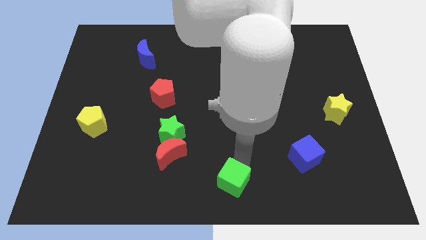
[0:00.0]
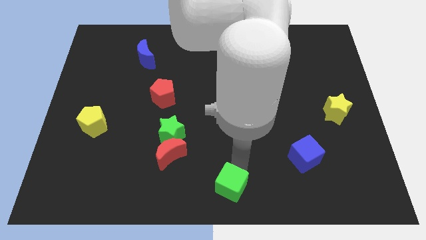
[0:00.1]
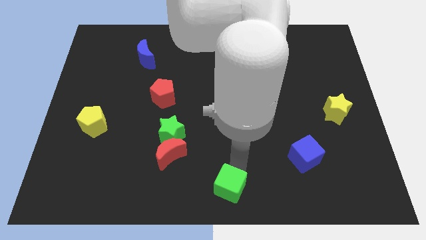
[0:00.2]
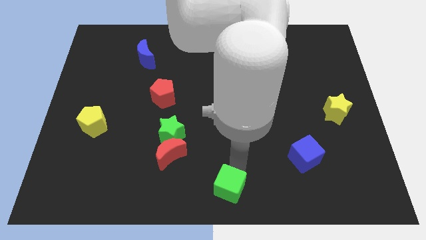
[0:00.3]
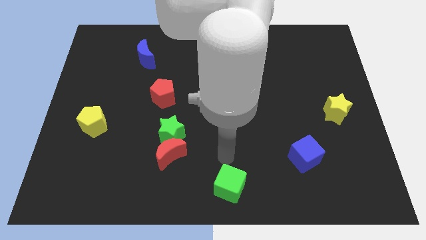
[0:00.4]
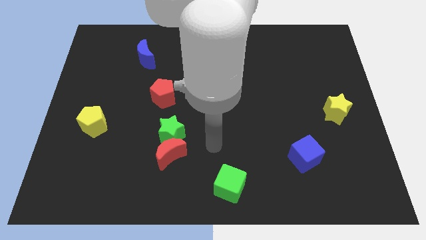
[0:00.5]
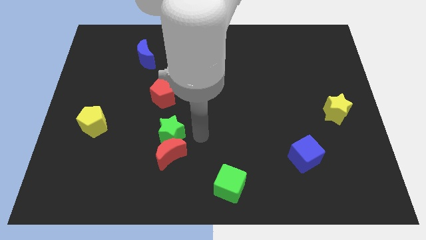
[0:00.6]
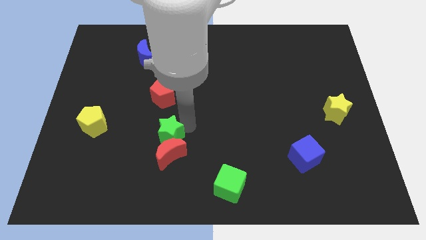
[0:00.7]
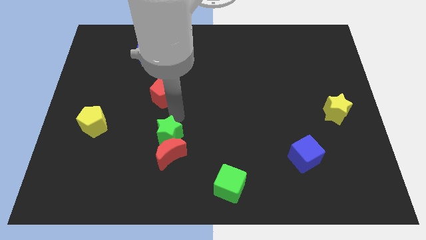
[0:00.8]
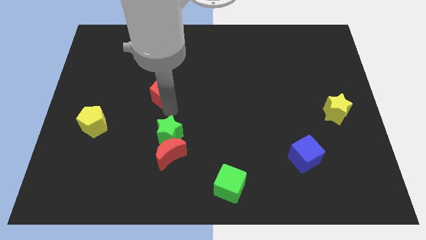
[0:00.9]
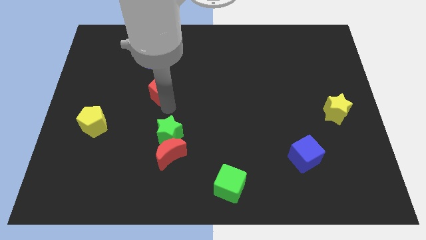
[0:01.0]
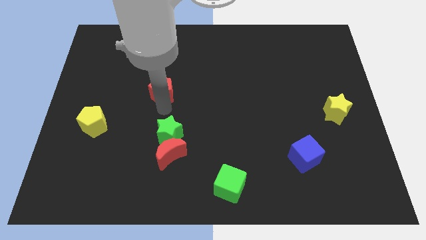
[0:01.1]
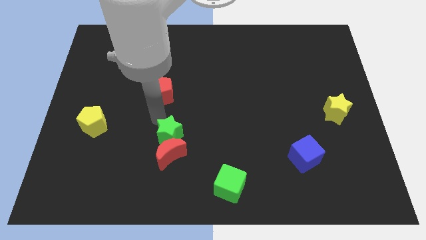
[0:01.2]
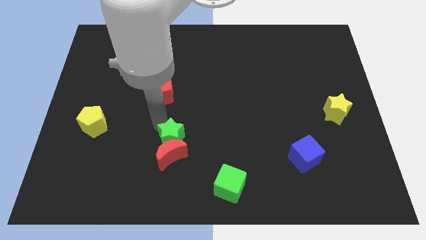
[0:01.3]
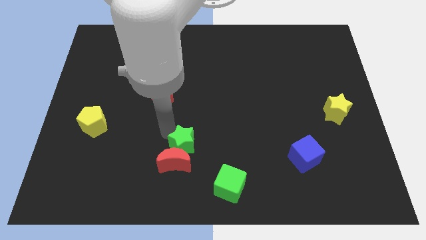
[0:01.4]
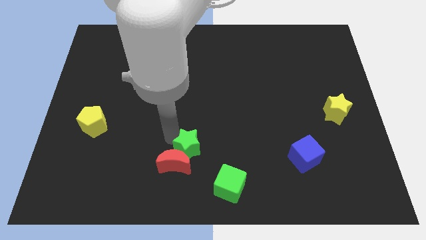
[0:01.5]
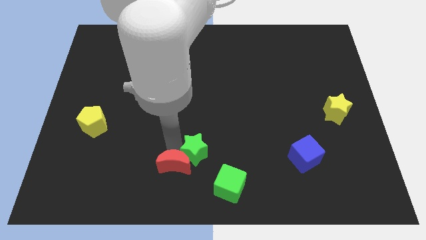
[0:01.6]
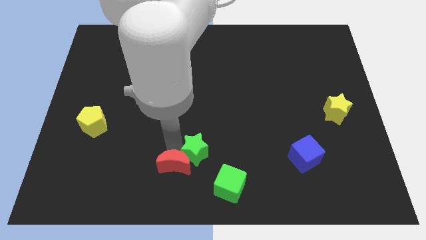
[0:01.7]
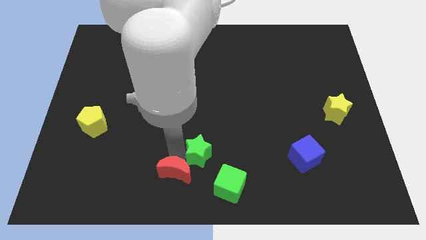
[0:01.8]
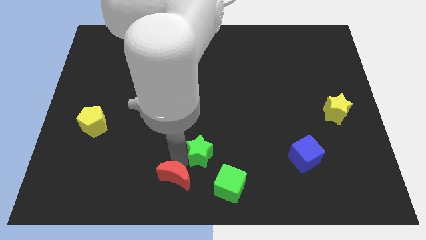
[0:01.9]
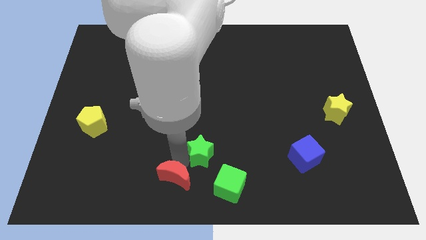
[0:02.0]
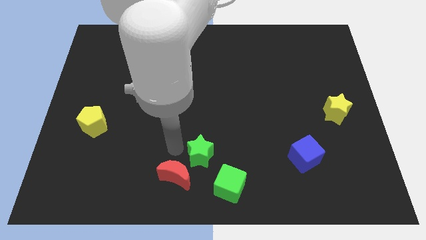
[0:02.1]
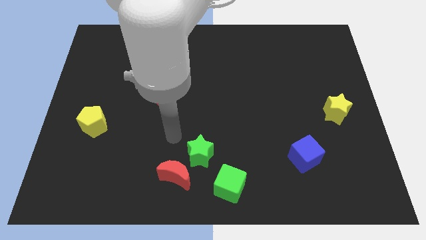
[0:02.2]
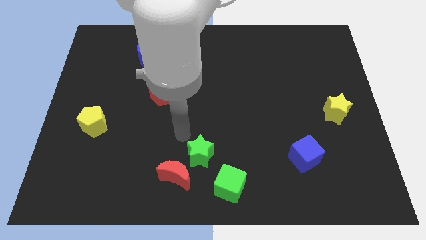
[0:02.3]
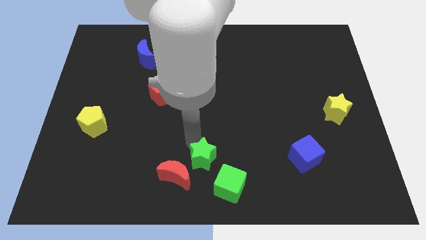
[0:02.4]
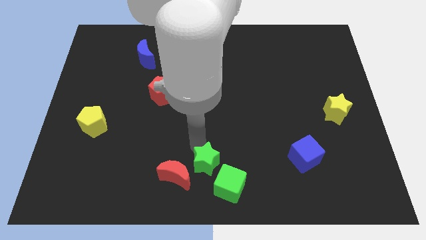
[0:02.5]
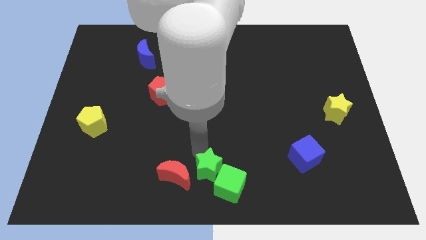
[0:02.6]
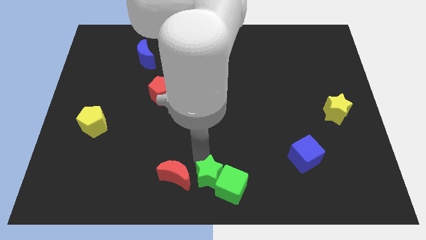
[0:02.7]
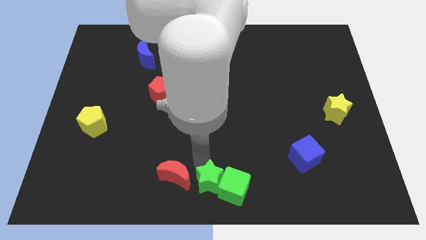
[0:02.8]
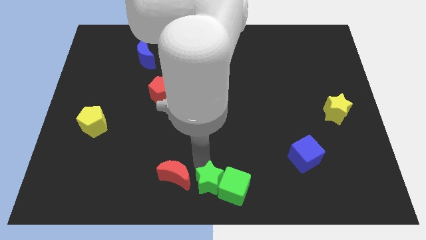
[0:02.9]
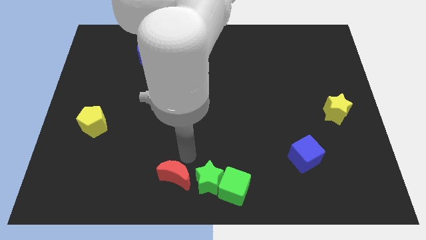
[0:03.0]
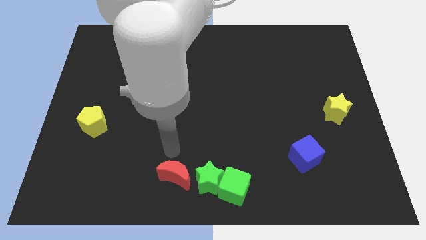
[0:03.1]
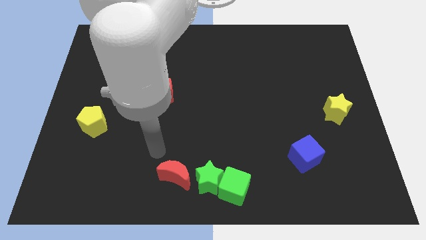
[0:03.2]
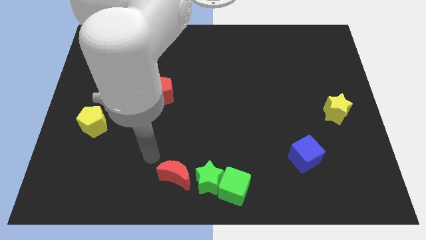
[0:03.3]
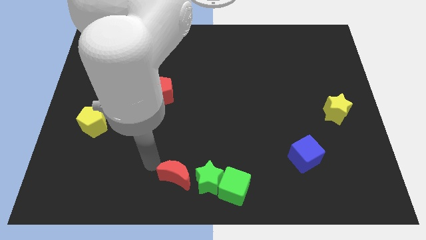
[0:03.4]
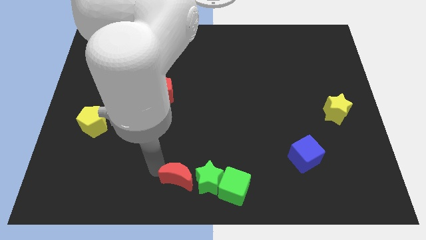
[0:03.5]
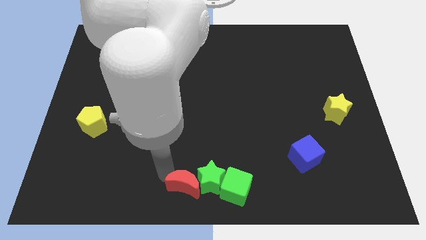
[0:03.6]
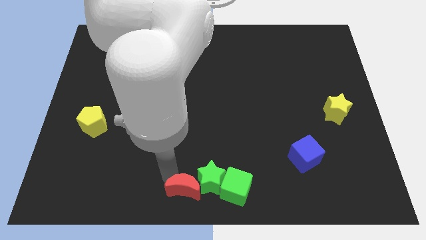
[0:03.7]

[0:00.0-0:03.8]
push green star and red moon in to the bottom center

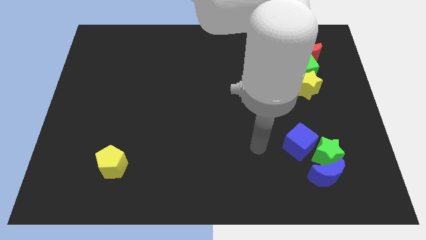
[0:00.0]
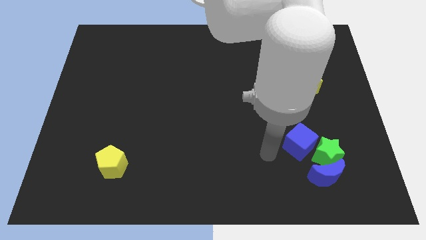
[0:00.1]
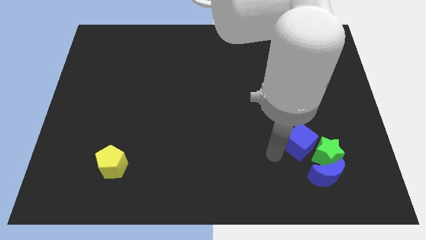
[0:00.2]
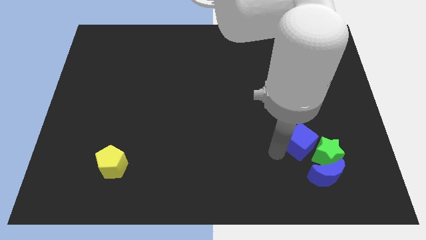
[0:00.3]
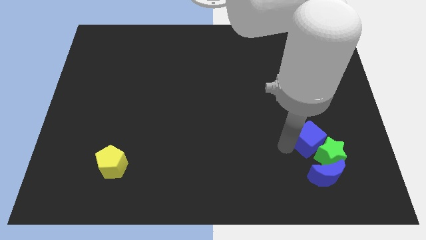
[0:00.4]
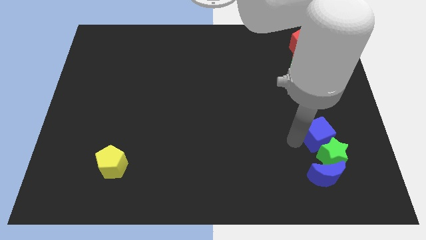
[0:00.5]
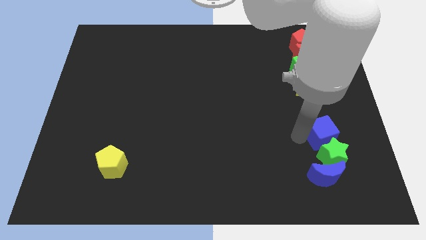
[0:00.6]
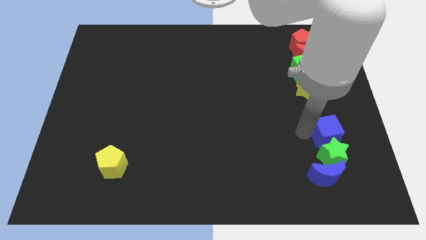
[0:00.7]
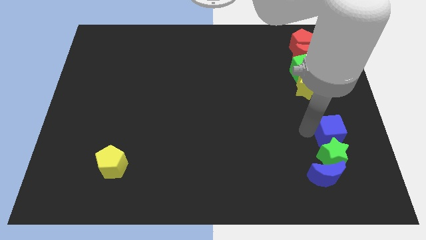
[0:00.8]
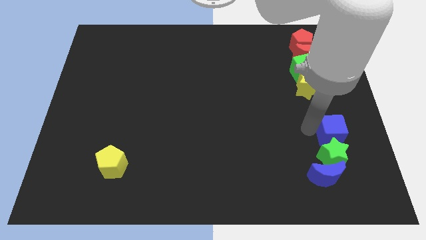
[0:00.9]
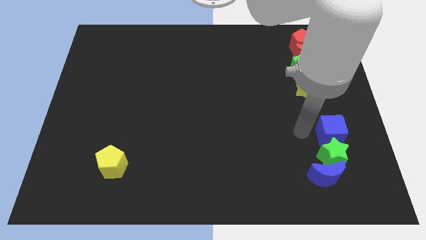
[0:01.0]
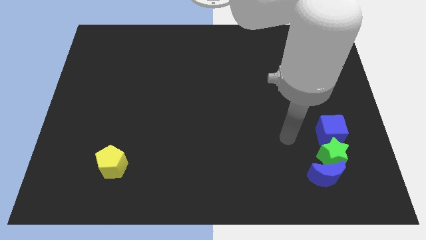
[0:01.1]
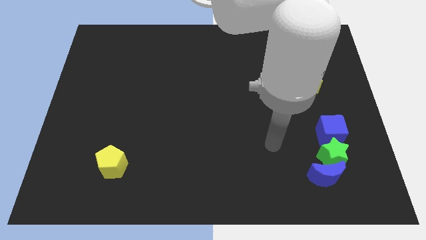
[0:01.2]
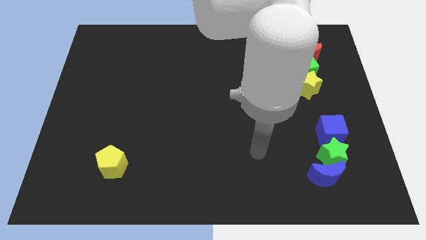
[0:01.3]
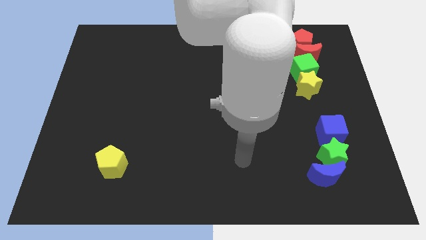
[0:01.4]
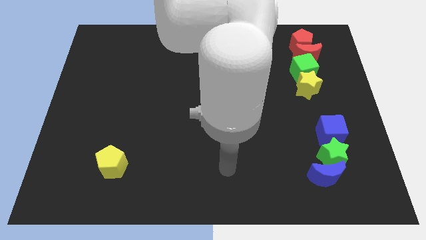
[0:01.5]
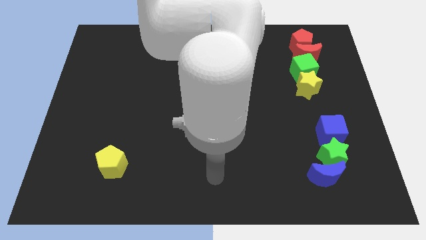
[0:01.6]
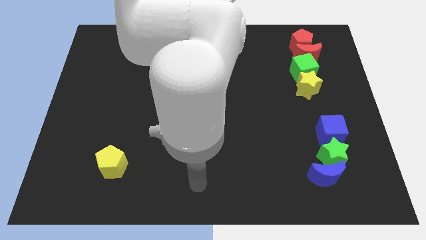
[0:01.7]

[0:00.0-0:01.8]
put the blue cube above the green star

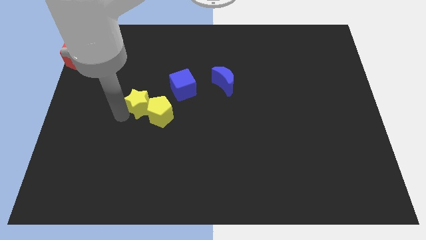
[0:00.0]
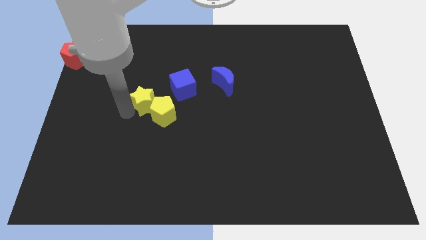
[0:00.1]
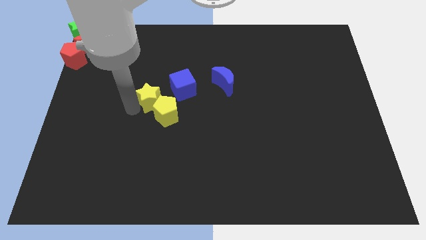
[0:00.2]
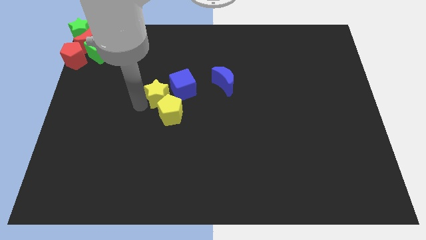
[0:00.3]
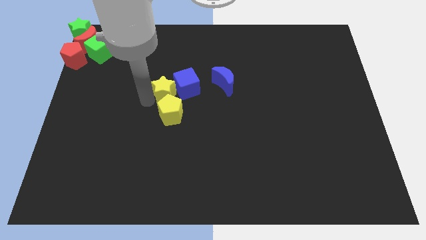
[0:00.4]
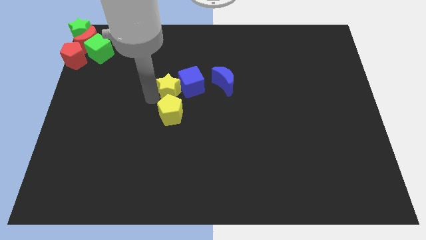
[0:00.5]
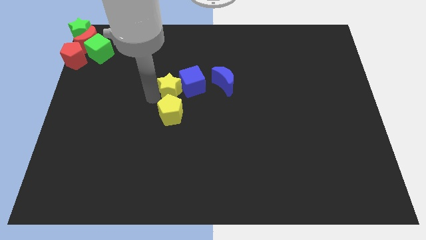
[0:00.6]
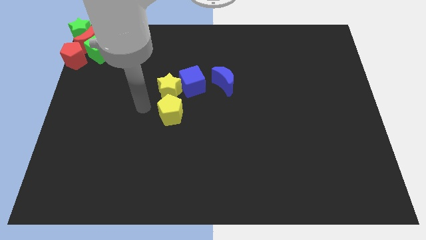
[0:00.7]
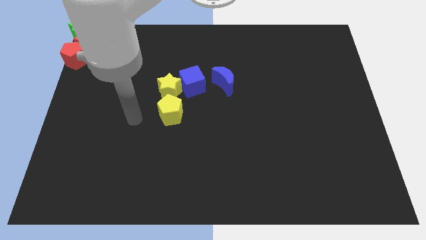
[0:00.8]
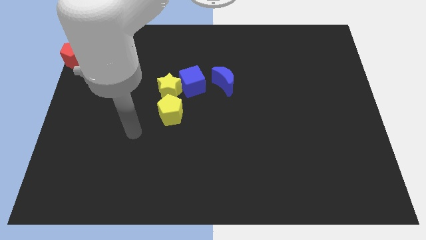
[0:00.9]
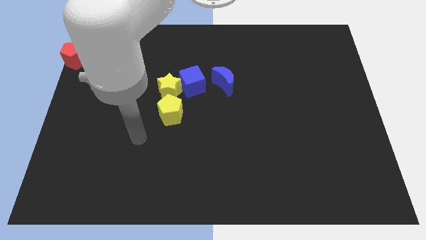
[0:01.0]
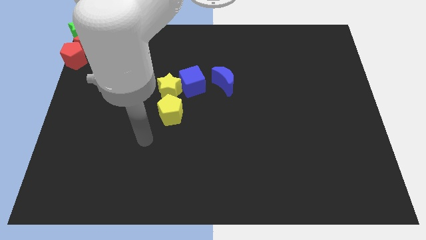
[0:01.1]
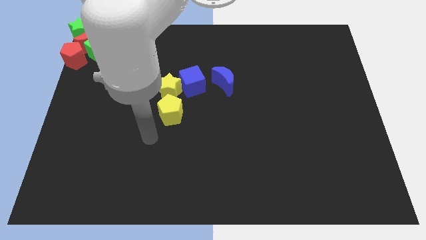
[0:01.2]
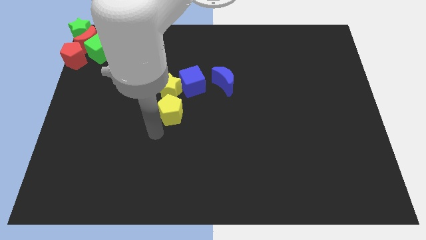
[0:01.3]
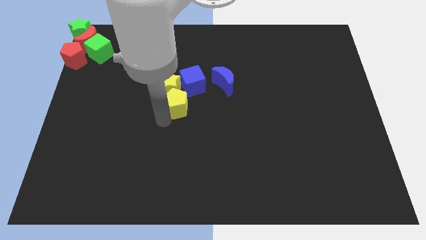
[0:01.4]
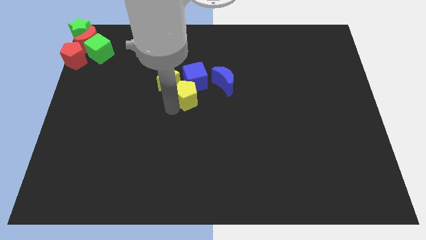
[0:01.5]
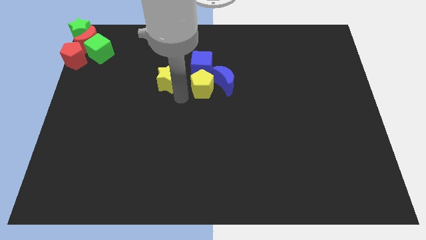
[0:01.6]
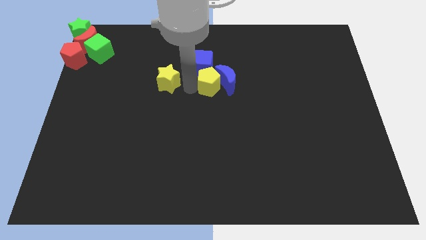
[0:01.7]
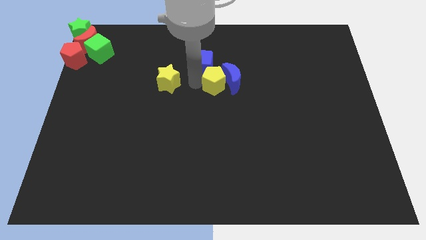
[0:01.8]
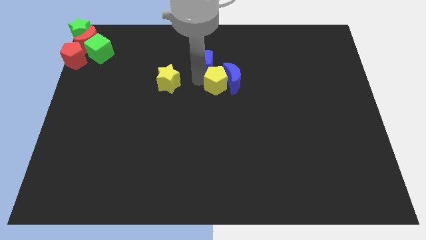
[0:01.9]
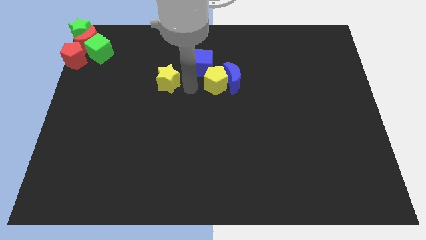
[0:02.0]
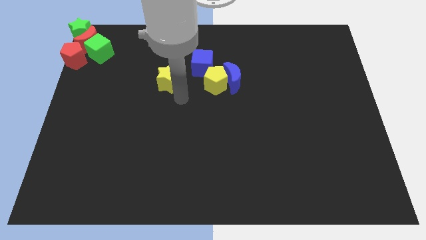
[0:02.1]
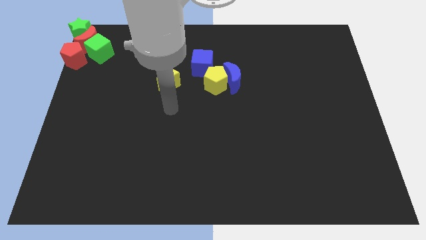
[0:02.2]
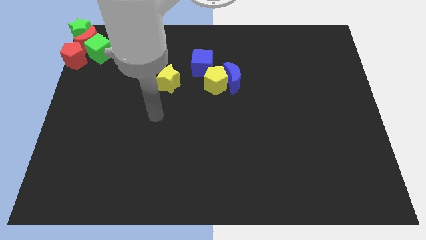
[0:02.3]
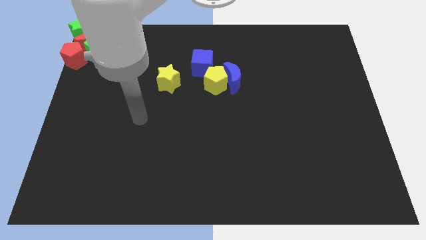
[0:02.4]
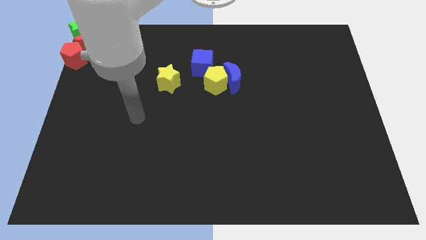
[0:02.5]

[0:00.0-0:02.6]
push the yellow pentagon into the two blue blocks

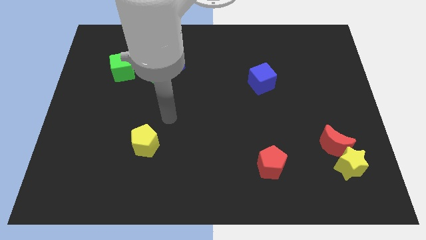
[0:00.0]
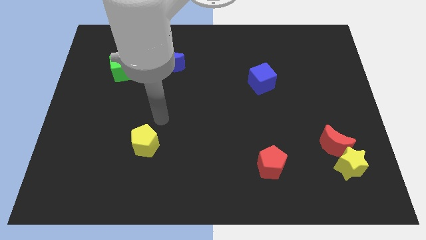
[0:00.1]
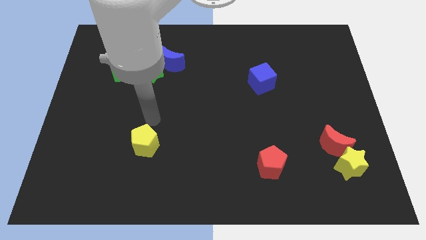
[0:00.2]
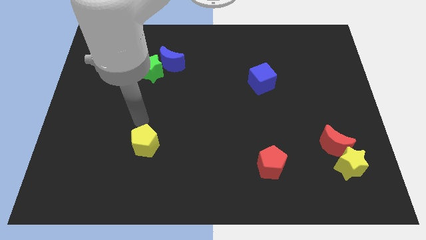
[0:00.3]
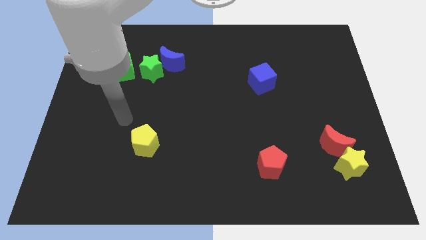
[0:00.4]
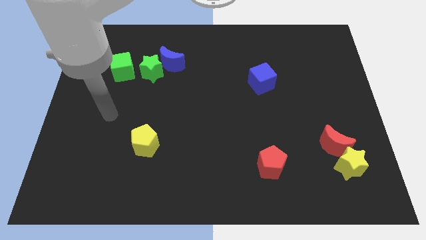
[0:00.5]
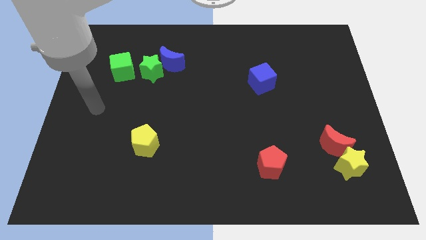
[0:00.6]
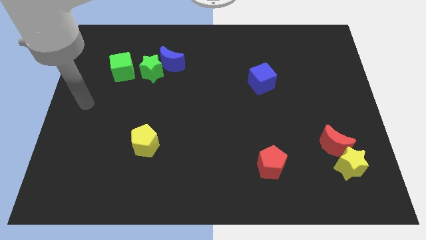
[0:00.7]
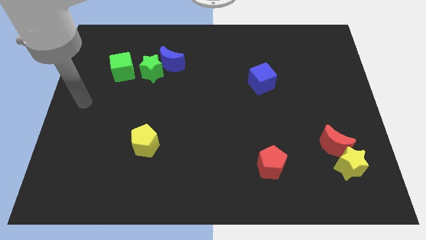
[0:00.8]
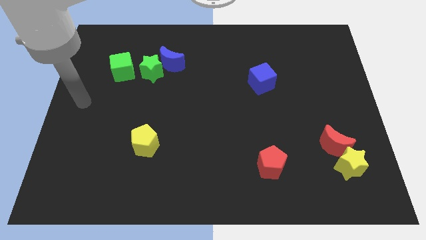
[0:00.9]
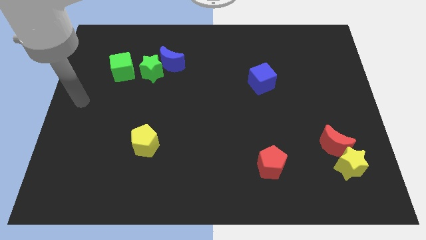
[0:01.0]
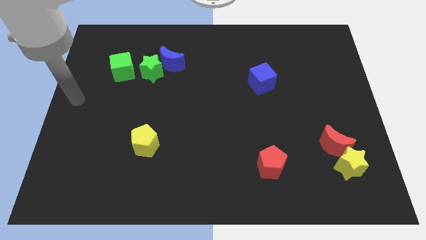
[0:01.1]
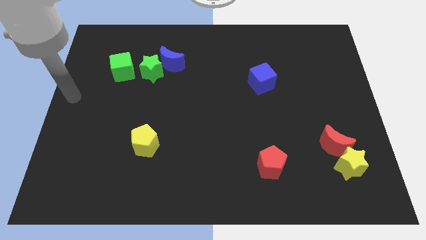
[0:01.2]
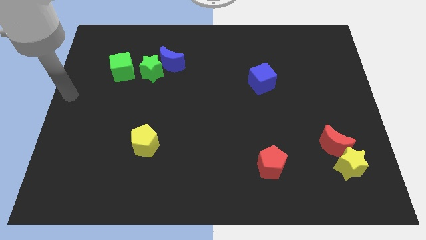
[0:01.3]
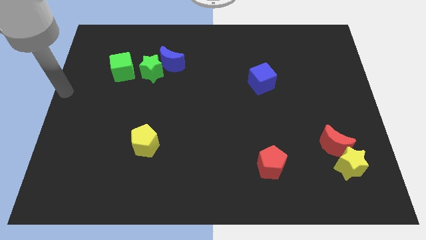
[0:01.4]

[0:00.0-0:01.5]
move the arm to the middle left
